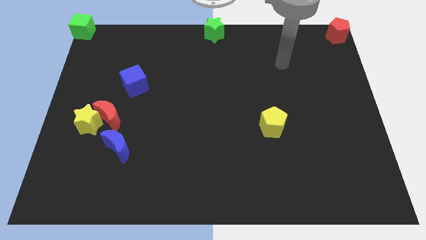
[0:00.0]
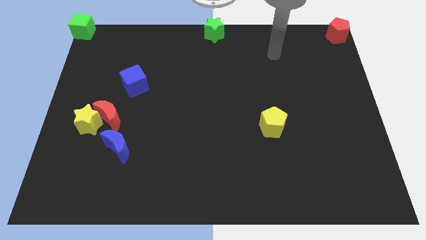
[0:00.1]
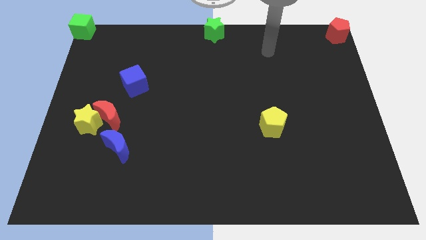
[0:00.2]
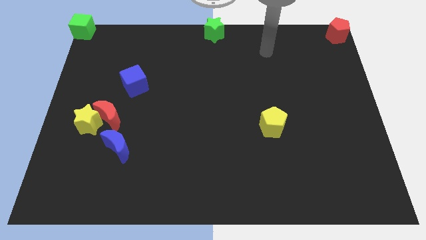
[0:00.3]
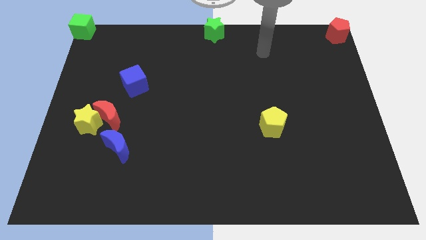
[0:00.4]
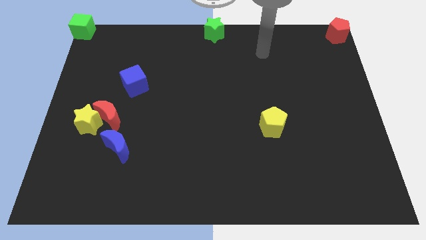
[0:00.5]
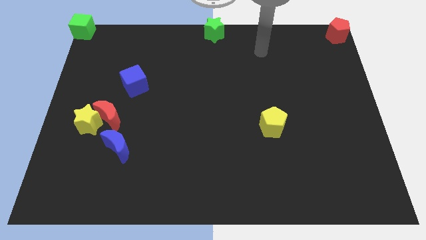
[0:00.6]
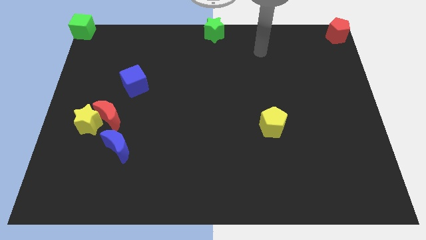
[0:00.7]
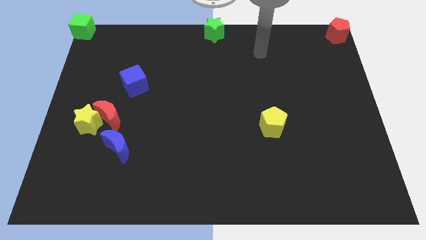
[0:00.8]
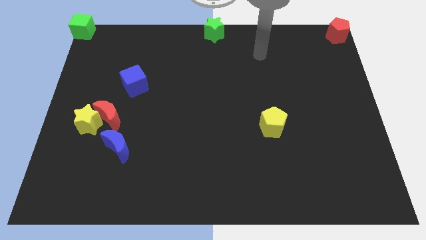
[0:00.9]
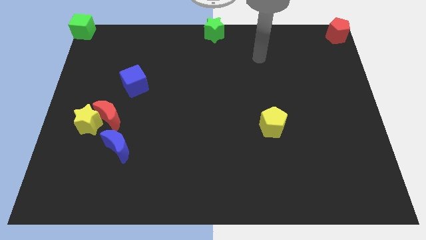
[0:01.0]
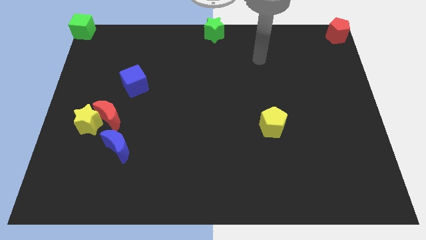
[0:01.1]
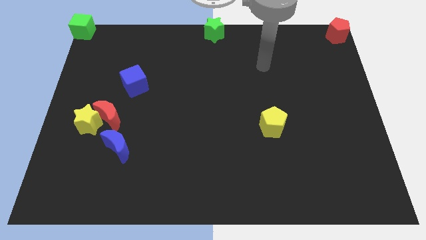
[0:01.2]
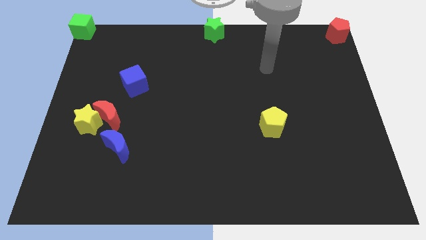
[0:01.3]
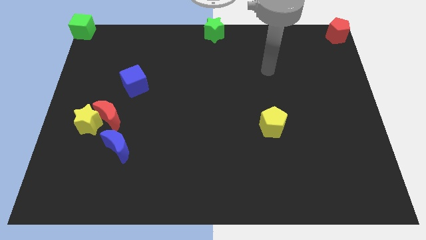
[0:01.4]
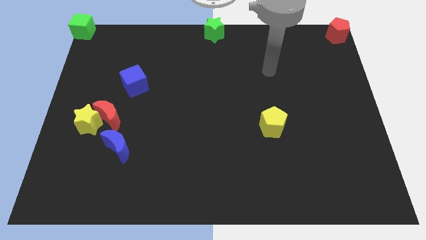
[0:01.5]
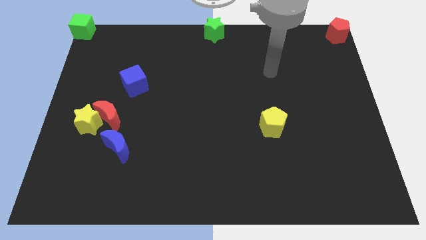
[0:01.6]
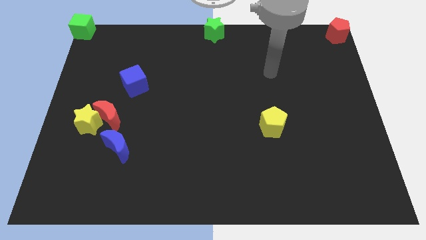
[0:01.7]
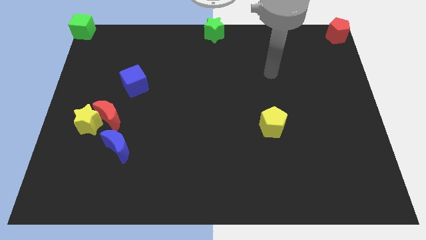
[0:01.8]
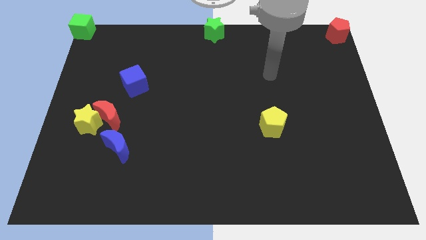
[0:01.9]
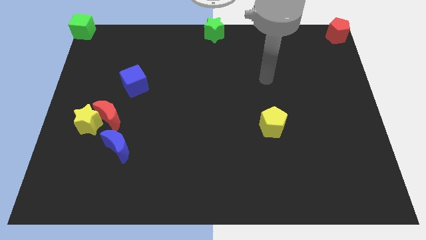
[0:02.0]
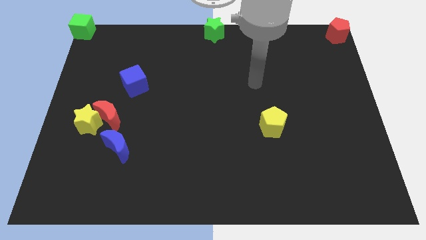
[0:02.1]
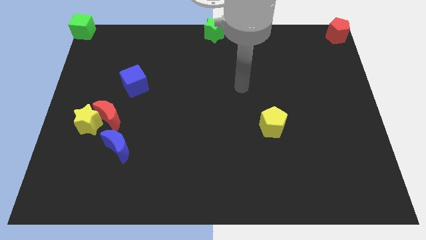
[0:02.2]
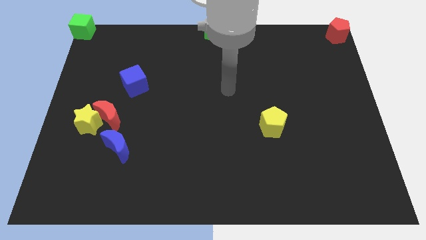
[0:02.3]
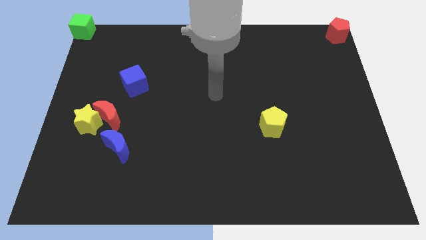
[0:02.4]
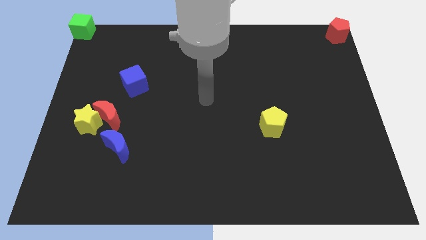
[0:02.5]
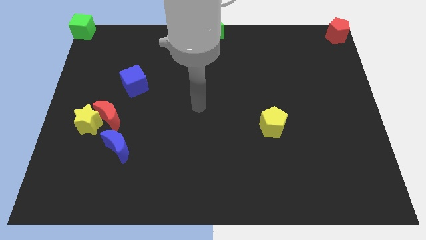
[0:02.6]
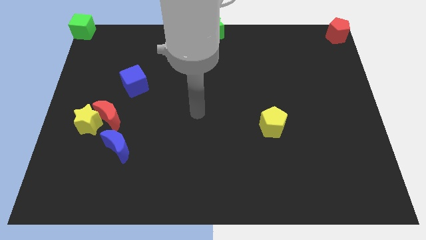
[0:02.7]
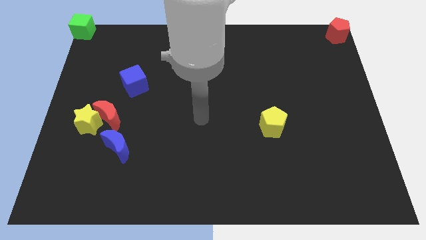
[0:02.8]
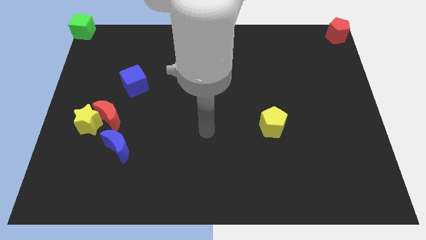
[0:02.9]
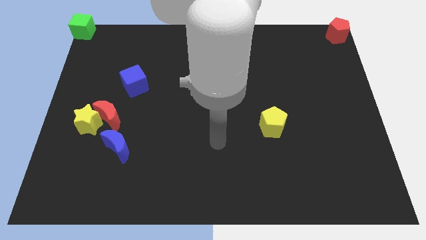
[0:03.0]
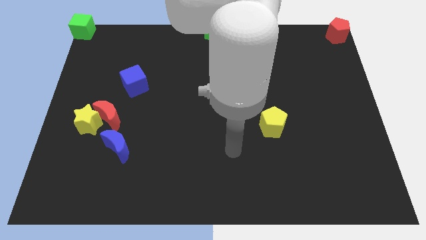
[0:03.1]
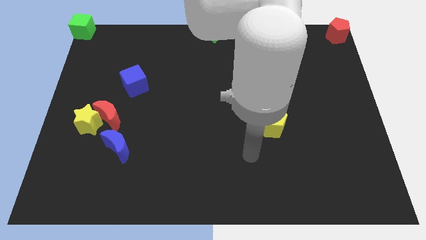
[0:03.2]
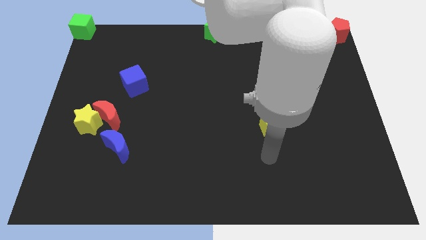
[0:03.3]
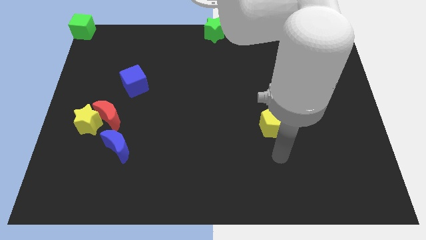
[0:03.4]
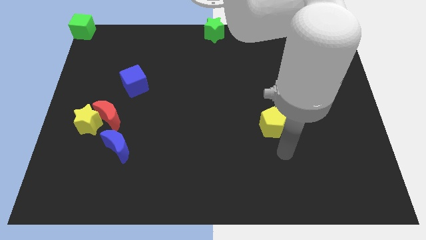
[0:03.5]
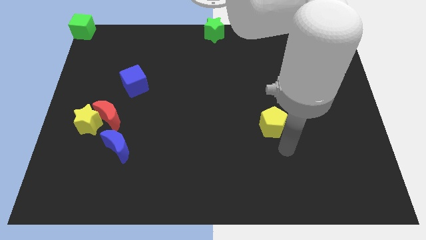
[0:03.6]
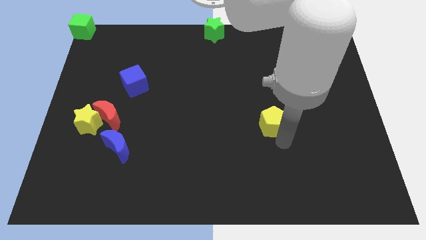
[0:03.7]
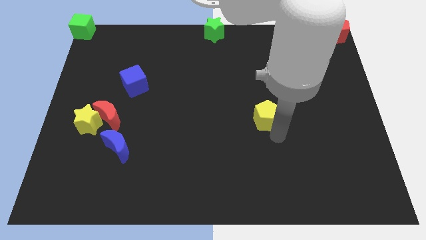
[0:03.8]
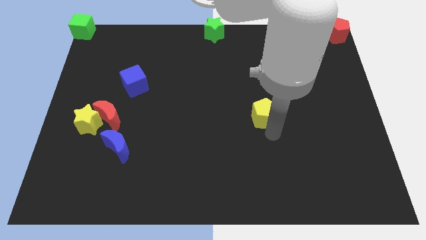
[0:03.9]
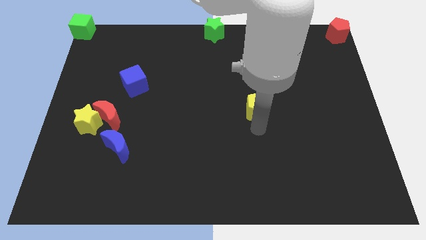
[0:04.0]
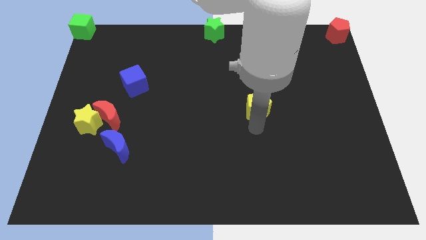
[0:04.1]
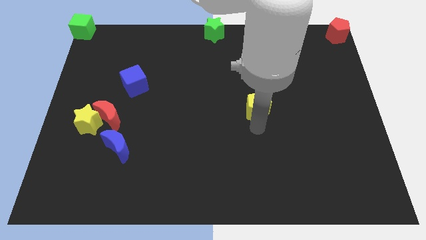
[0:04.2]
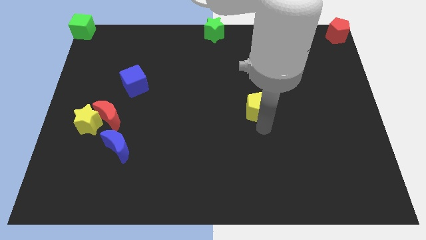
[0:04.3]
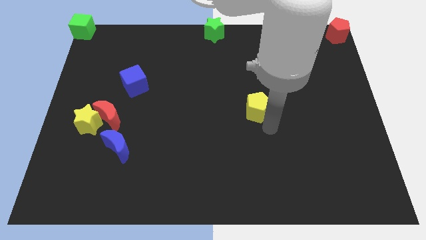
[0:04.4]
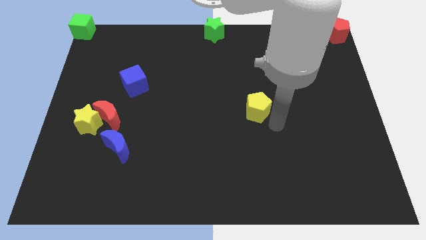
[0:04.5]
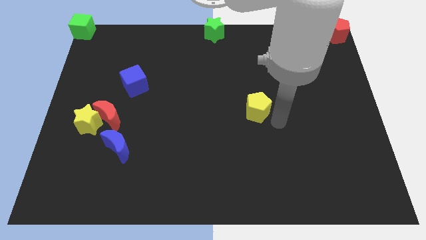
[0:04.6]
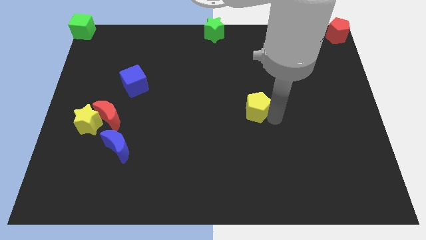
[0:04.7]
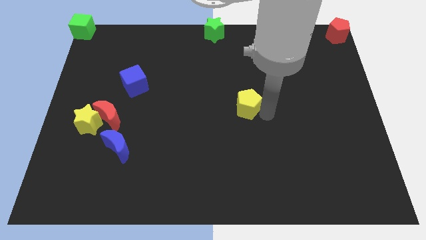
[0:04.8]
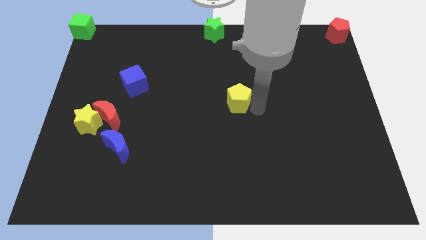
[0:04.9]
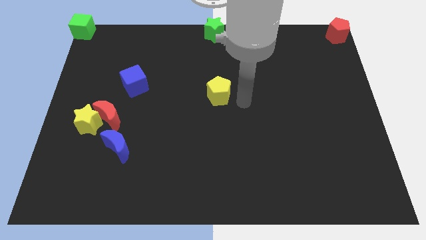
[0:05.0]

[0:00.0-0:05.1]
place the yellow pentagon at center of the board

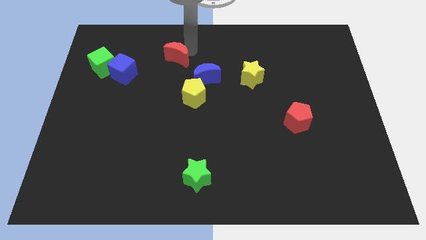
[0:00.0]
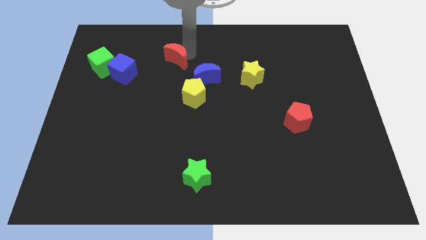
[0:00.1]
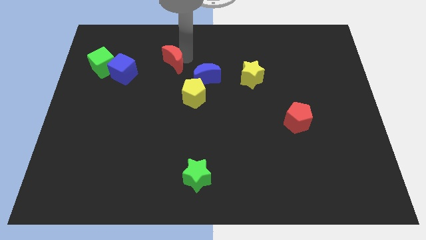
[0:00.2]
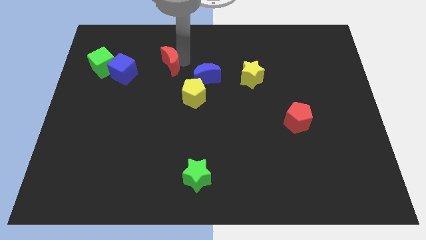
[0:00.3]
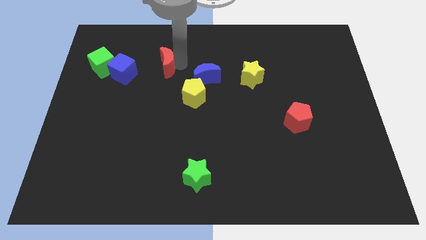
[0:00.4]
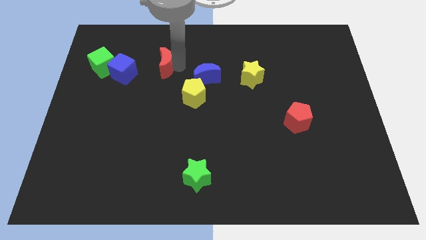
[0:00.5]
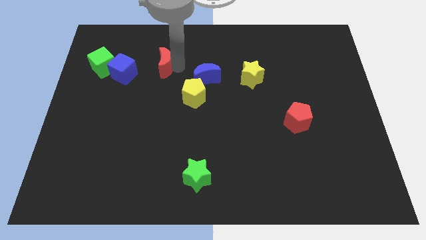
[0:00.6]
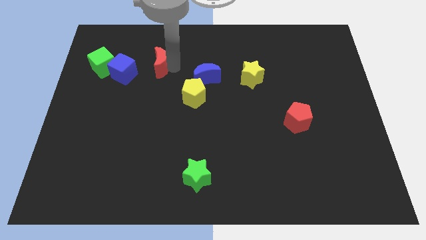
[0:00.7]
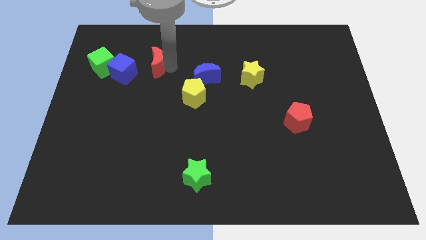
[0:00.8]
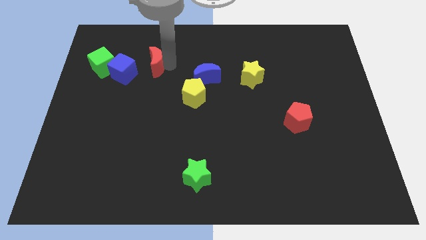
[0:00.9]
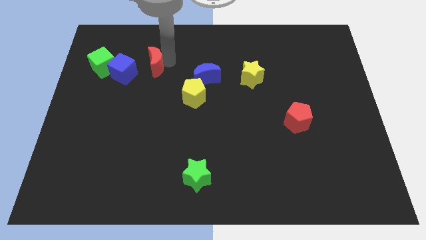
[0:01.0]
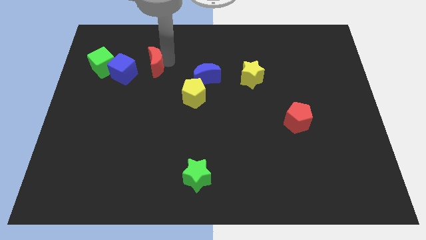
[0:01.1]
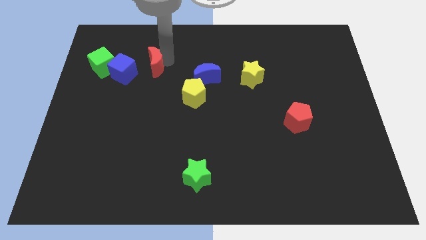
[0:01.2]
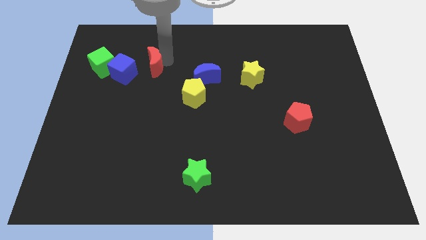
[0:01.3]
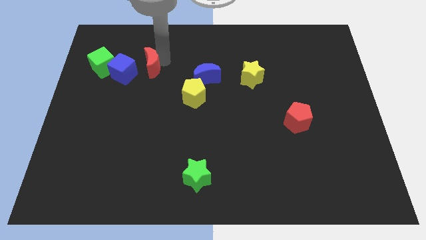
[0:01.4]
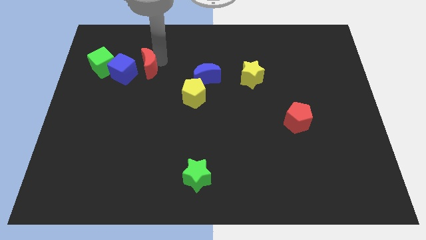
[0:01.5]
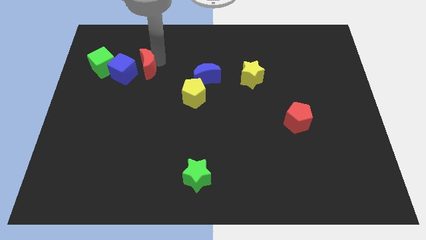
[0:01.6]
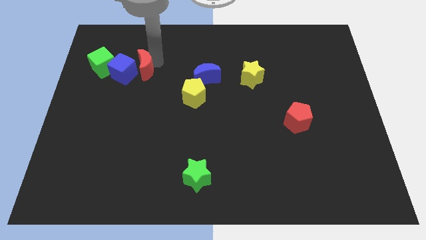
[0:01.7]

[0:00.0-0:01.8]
push the red crescent towards the blue cube

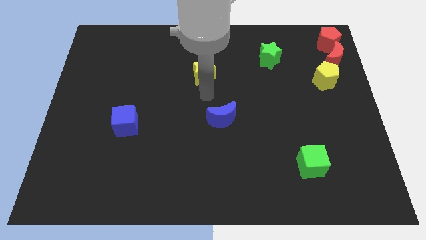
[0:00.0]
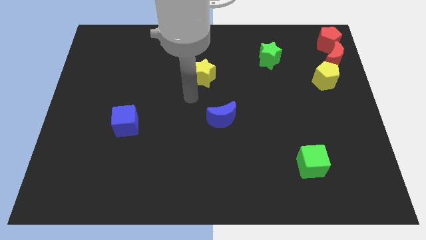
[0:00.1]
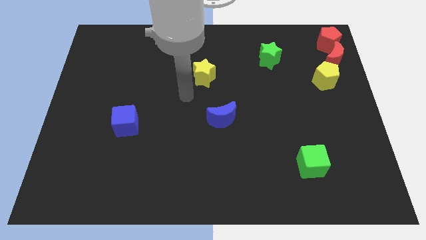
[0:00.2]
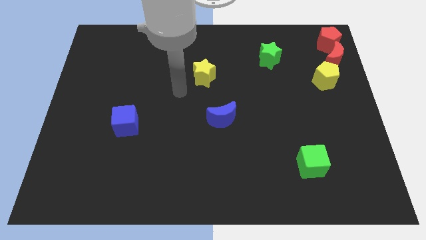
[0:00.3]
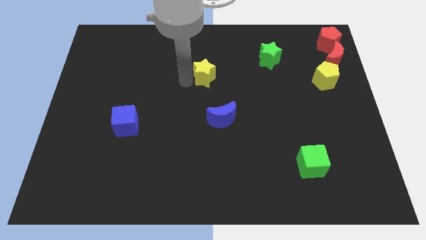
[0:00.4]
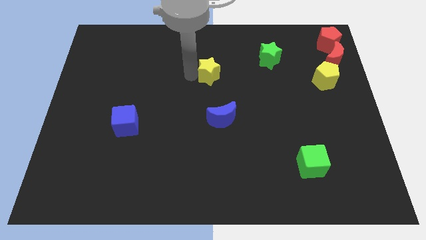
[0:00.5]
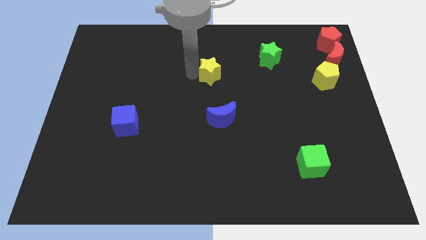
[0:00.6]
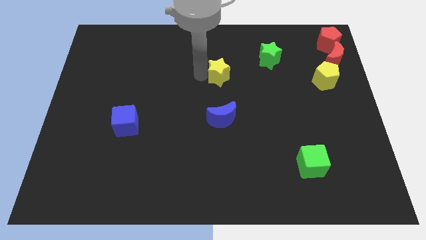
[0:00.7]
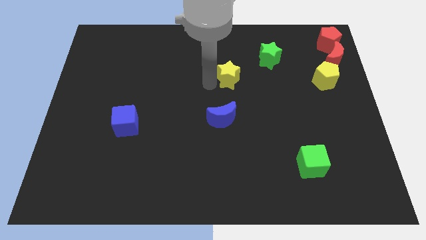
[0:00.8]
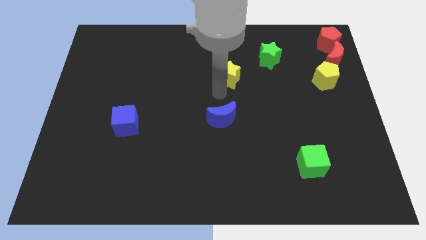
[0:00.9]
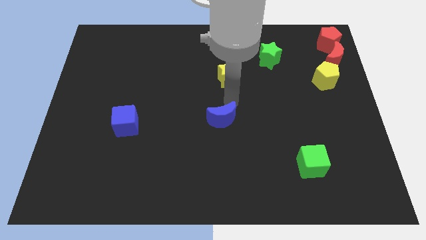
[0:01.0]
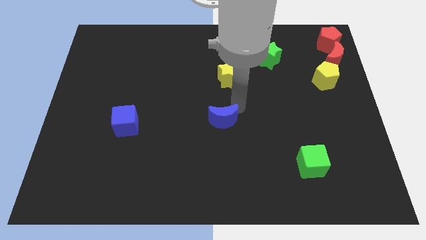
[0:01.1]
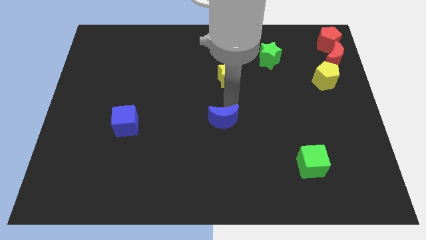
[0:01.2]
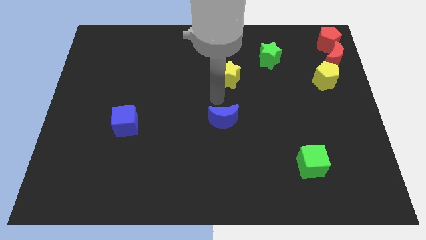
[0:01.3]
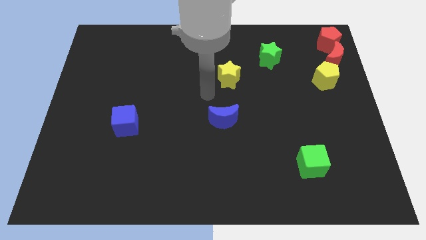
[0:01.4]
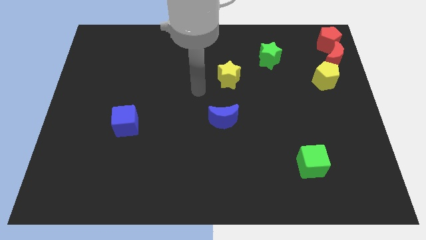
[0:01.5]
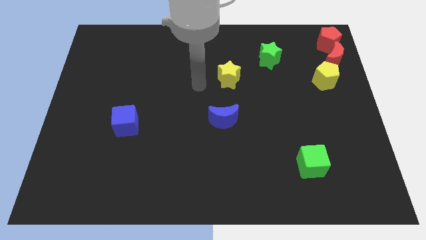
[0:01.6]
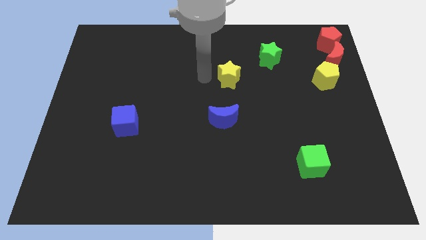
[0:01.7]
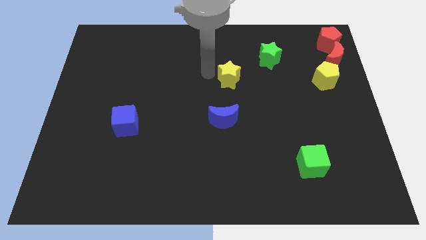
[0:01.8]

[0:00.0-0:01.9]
slightly push the yellow star towards the green star

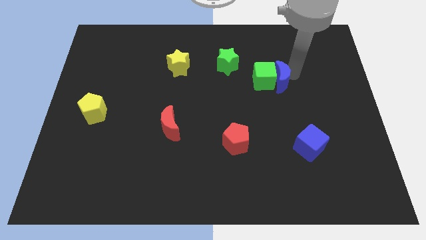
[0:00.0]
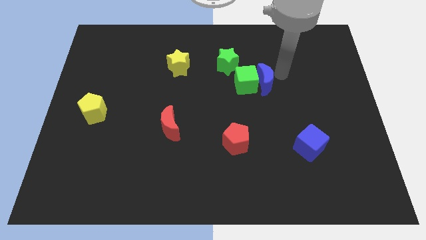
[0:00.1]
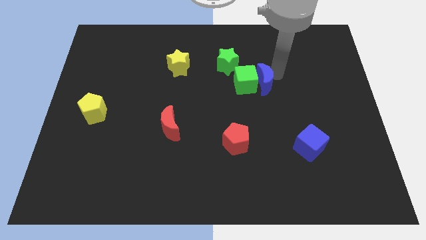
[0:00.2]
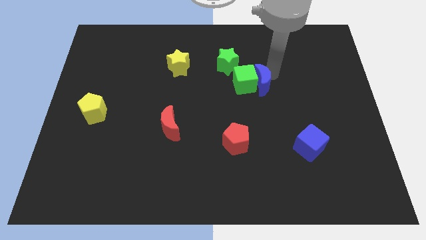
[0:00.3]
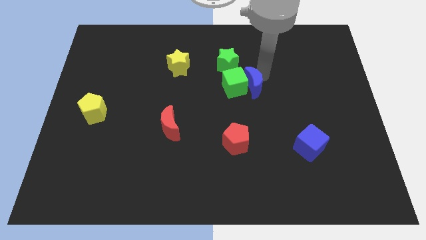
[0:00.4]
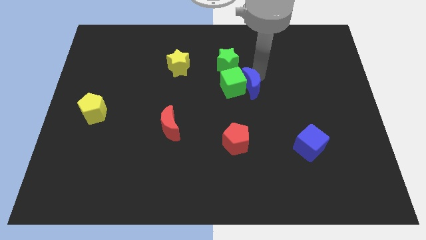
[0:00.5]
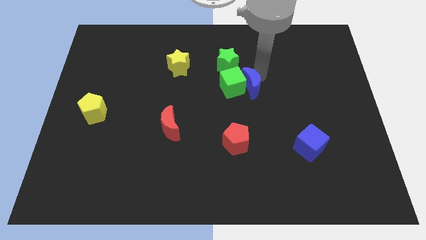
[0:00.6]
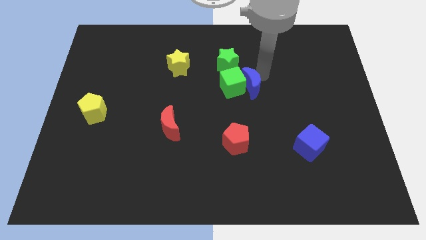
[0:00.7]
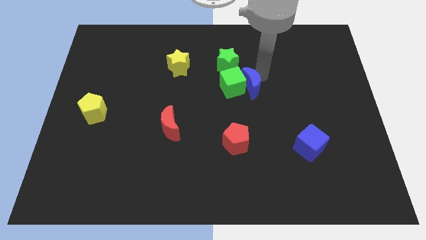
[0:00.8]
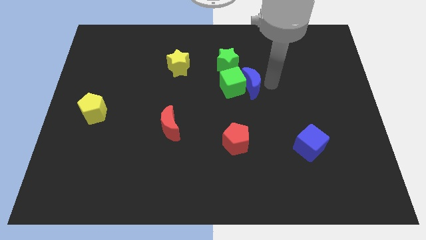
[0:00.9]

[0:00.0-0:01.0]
move green cube below green star
